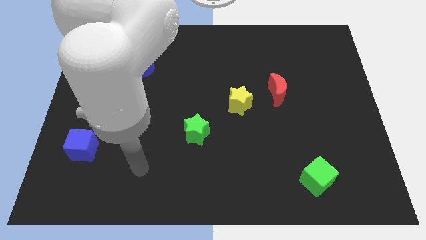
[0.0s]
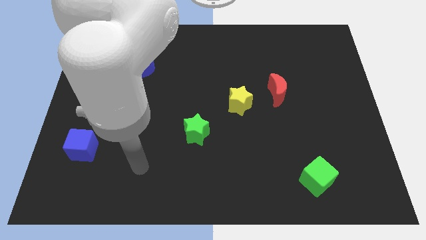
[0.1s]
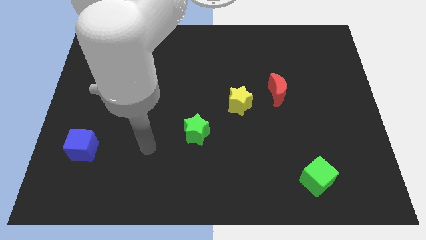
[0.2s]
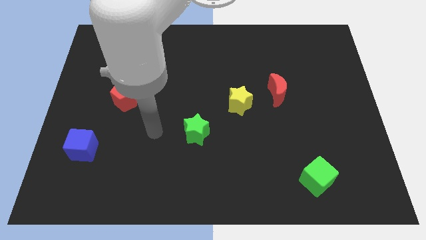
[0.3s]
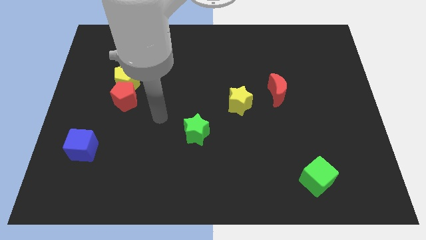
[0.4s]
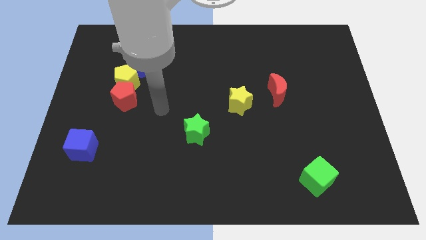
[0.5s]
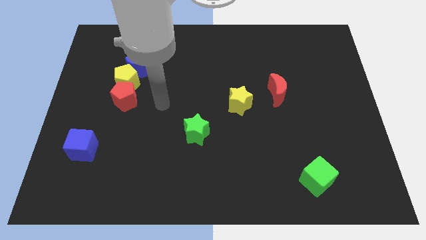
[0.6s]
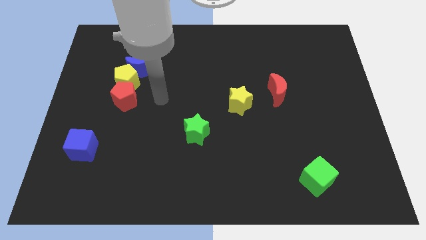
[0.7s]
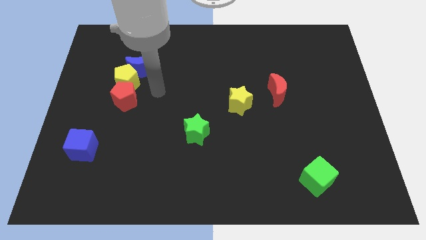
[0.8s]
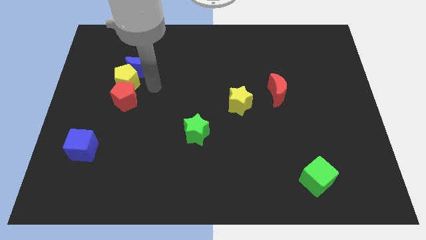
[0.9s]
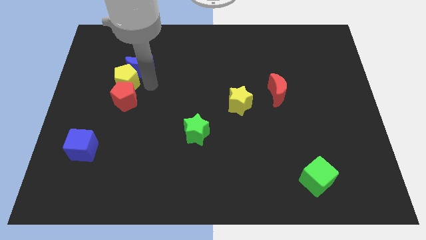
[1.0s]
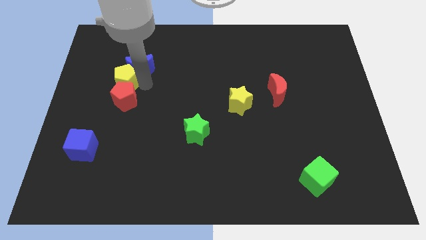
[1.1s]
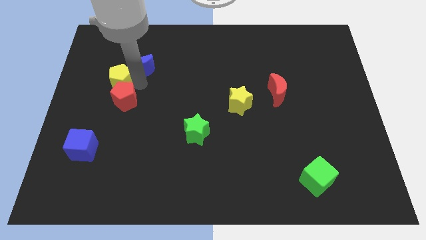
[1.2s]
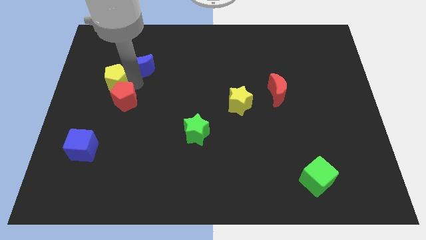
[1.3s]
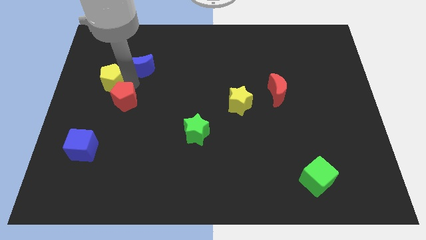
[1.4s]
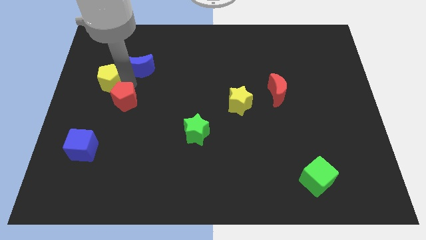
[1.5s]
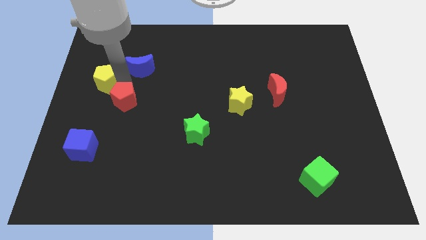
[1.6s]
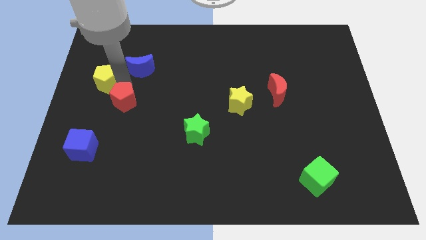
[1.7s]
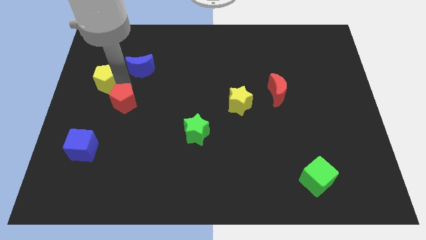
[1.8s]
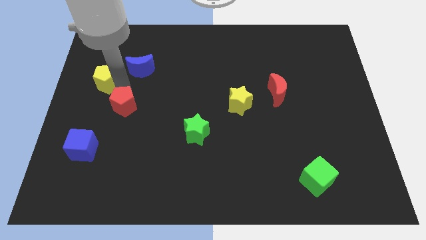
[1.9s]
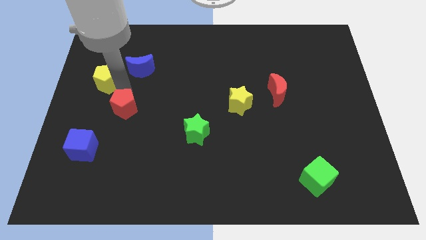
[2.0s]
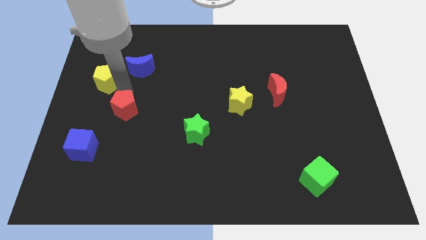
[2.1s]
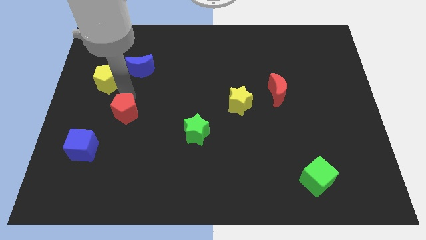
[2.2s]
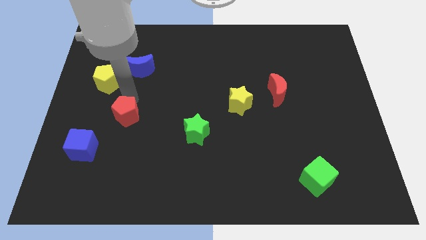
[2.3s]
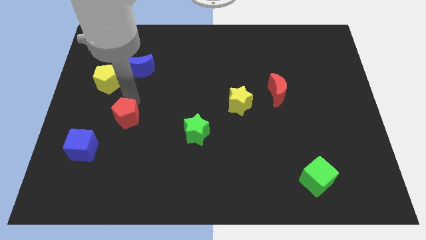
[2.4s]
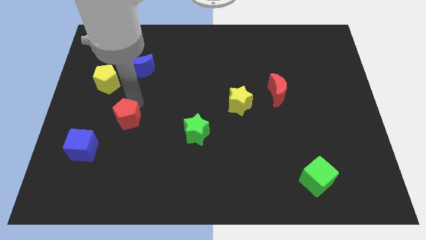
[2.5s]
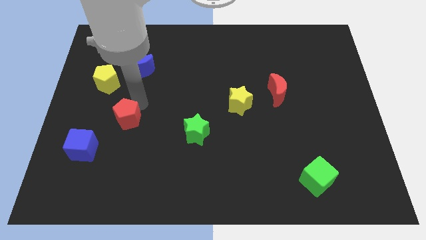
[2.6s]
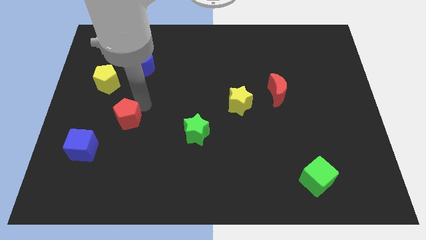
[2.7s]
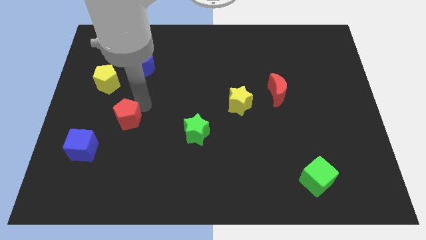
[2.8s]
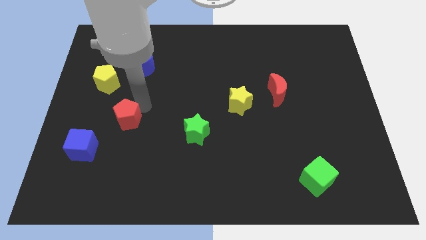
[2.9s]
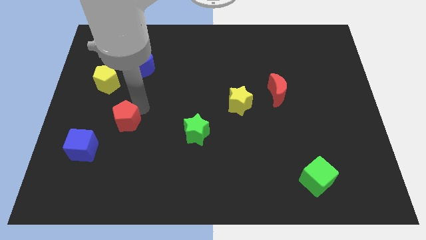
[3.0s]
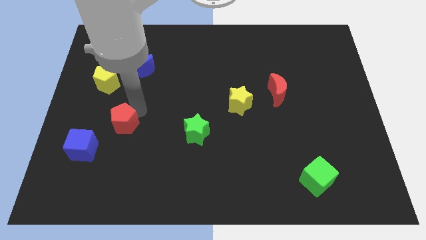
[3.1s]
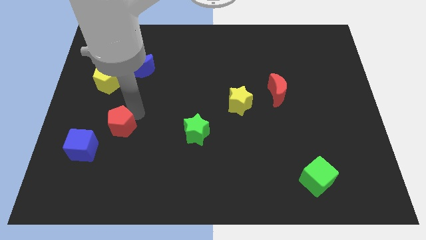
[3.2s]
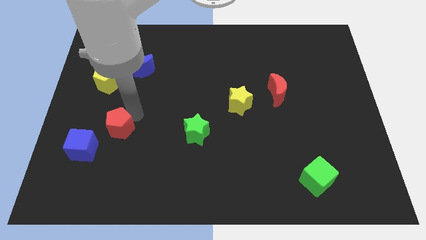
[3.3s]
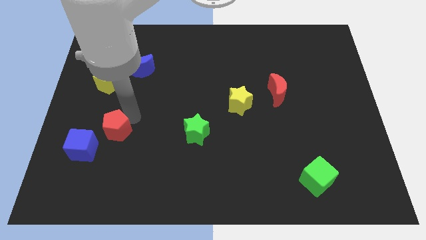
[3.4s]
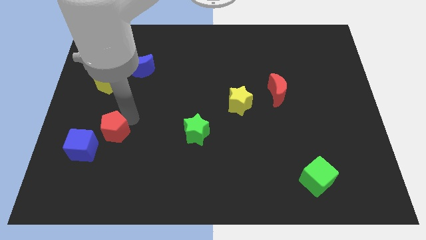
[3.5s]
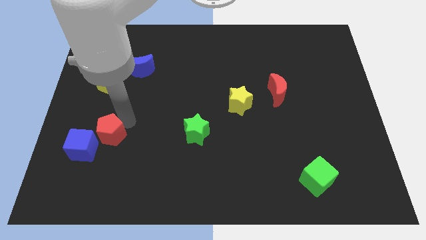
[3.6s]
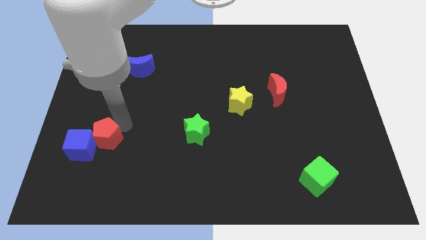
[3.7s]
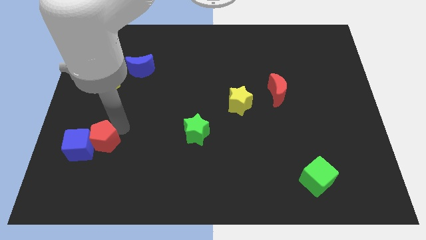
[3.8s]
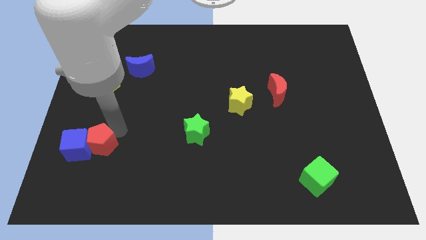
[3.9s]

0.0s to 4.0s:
move the red pentagon towards the blue cube

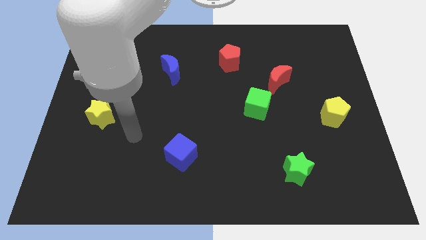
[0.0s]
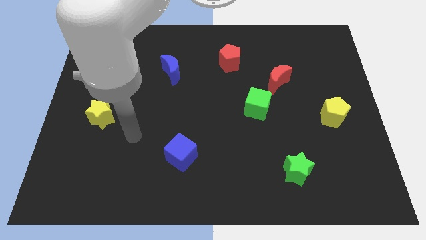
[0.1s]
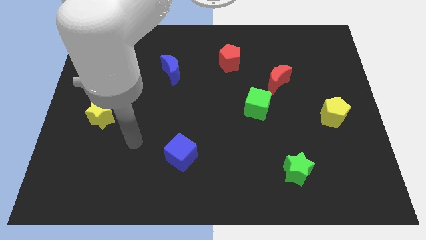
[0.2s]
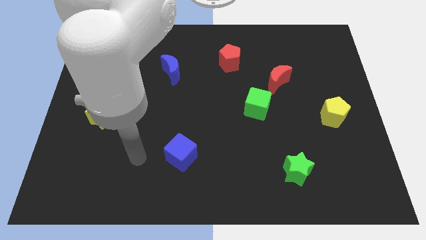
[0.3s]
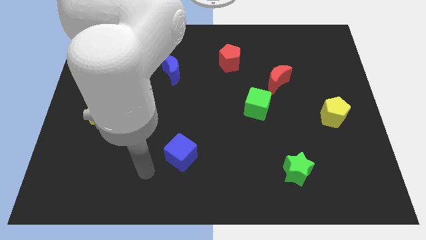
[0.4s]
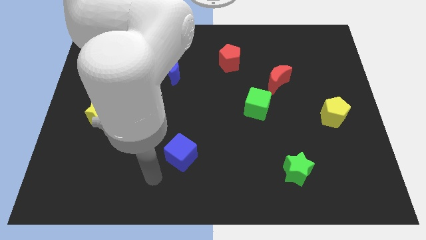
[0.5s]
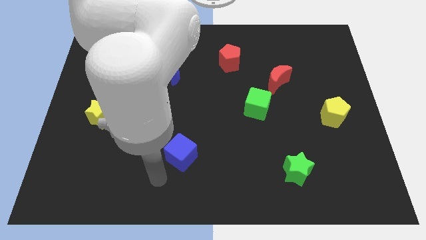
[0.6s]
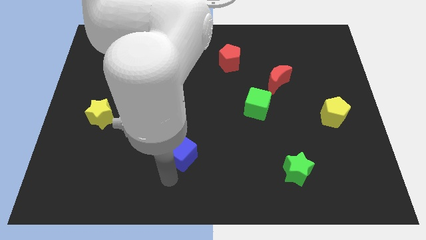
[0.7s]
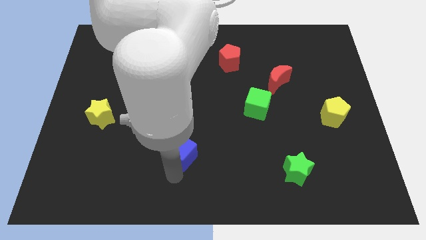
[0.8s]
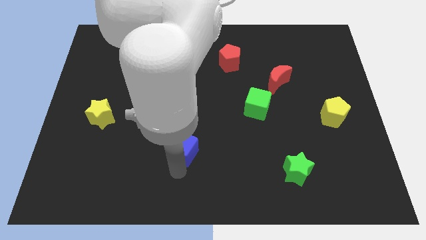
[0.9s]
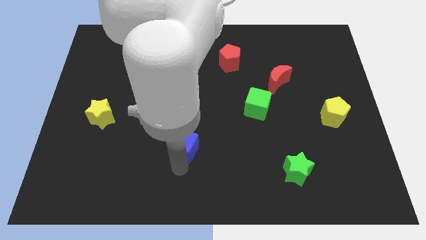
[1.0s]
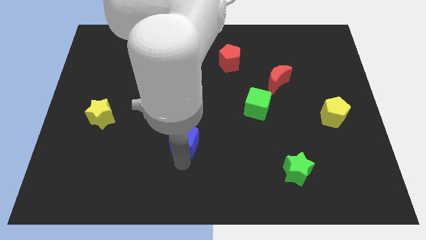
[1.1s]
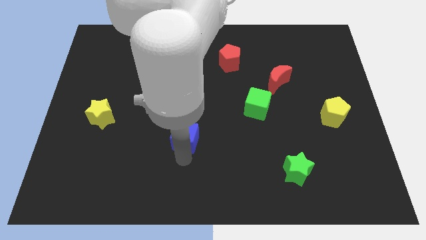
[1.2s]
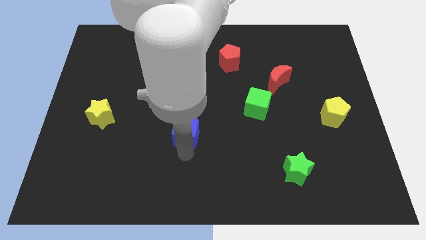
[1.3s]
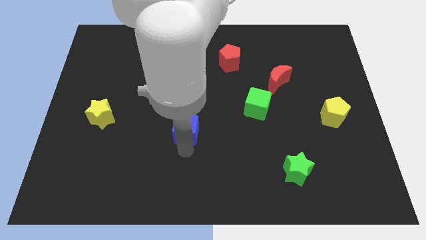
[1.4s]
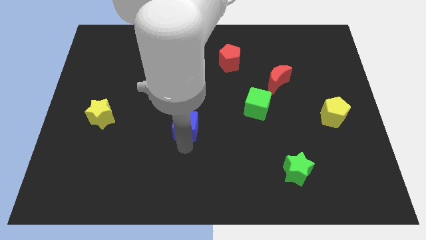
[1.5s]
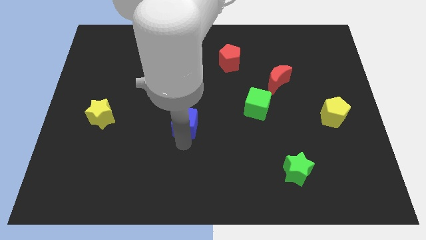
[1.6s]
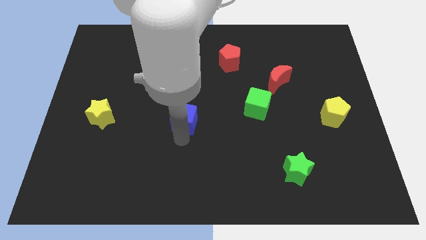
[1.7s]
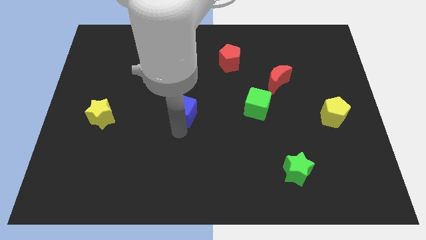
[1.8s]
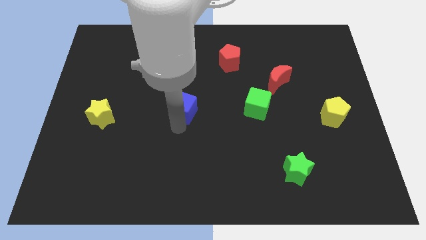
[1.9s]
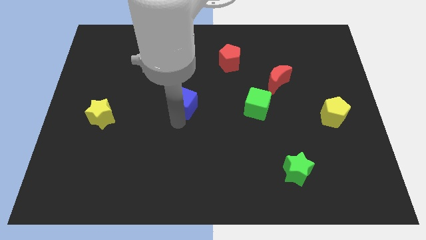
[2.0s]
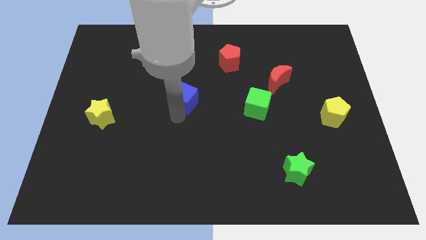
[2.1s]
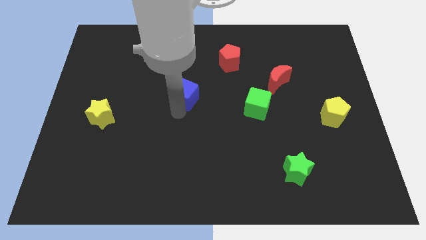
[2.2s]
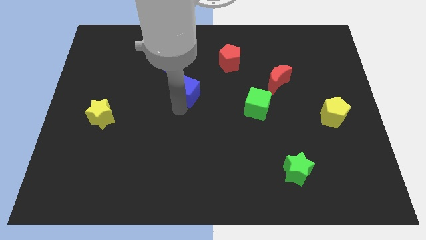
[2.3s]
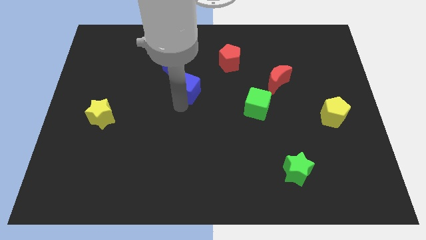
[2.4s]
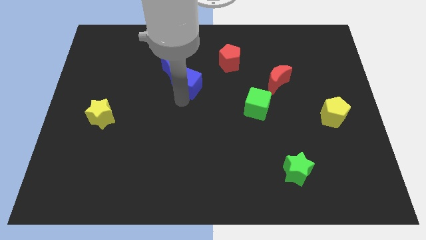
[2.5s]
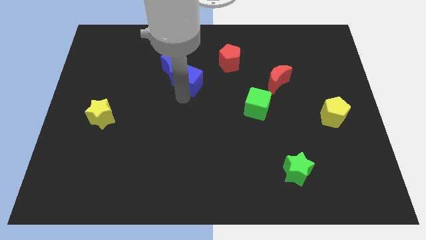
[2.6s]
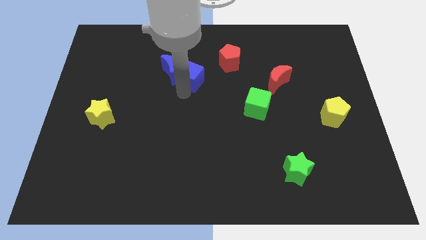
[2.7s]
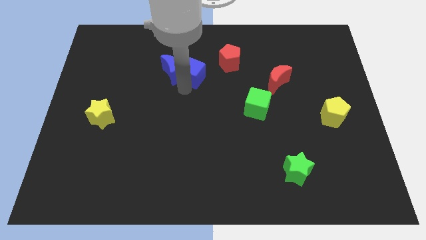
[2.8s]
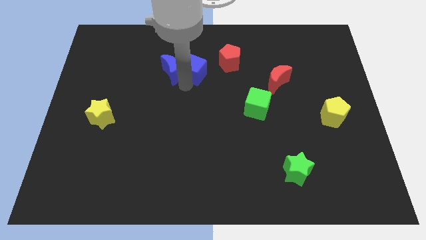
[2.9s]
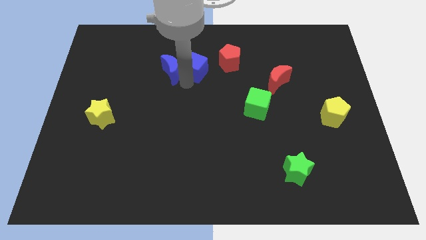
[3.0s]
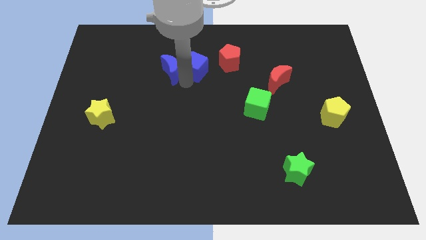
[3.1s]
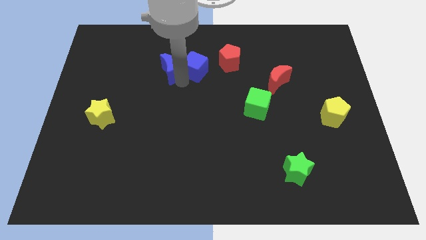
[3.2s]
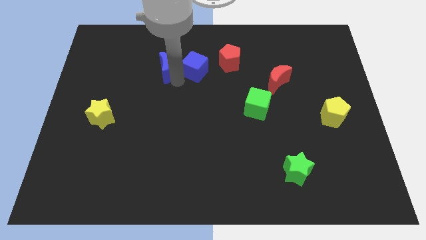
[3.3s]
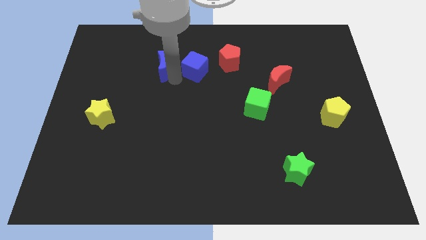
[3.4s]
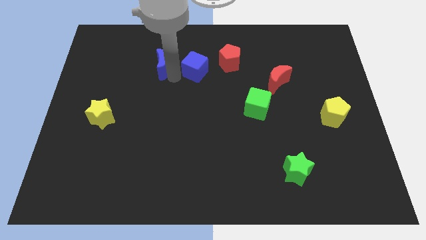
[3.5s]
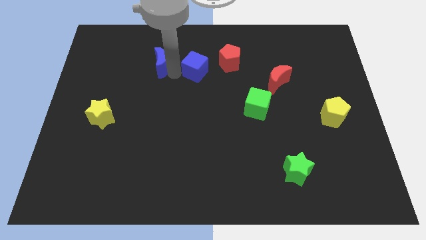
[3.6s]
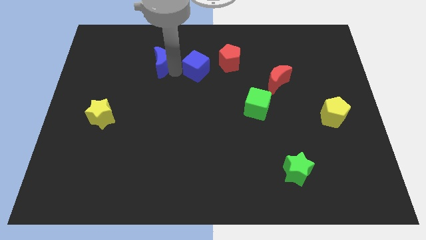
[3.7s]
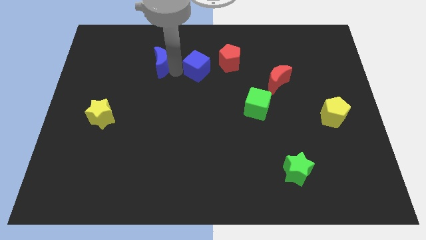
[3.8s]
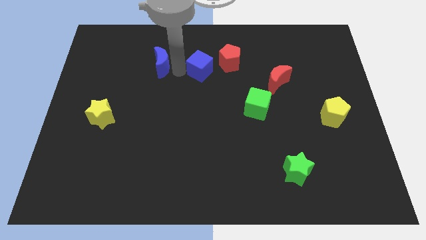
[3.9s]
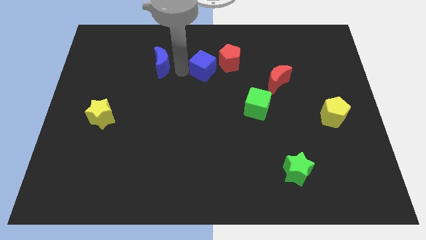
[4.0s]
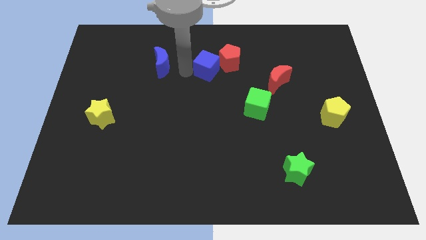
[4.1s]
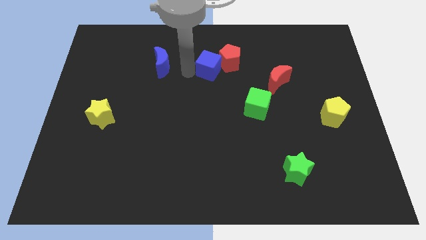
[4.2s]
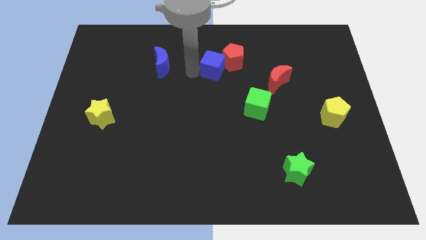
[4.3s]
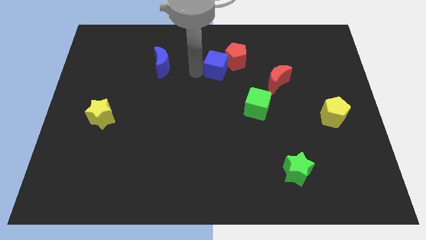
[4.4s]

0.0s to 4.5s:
move the blue cube to the red pentagon

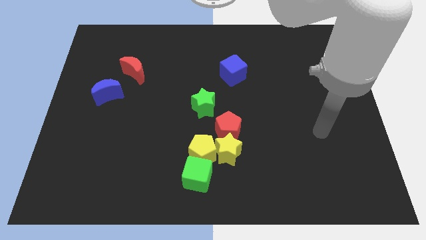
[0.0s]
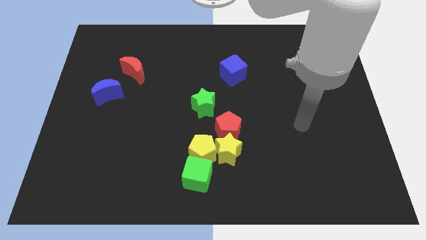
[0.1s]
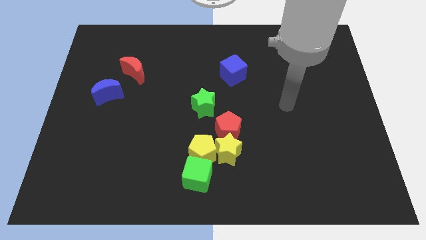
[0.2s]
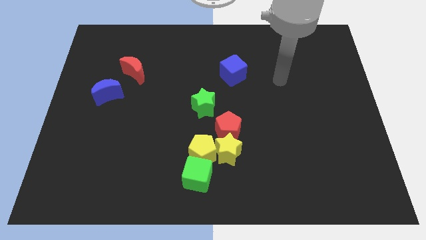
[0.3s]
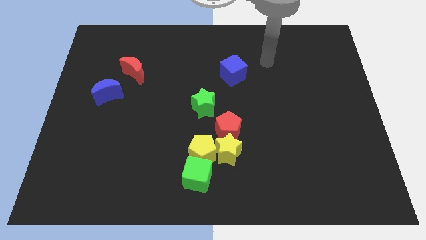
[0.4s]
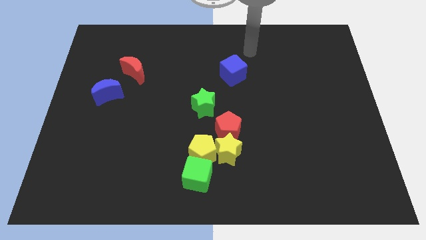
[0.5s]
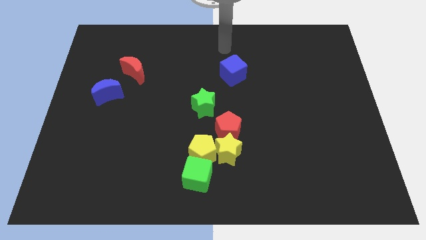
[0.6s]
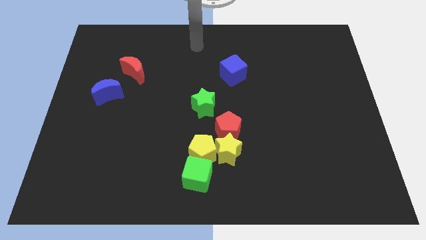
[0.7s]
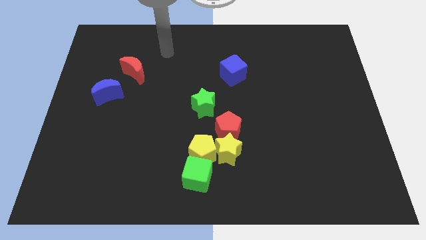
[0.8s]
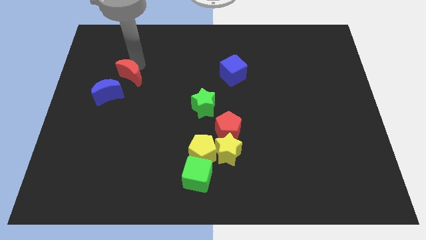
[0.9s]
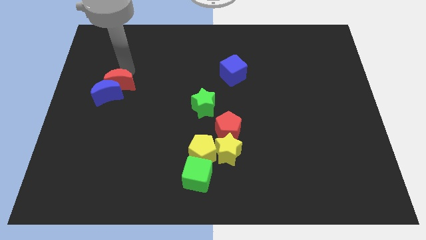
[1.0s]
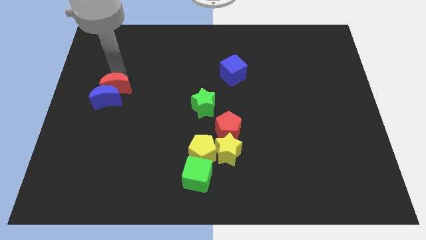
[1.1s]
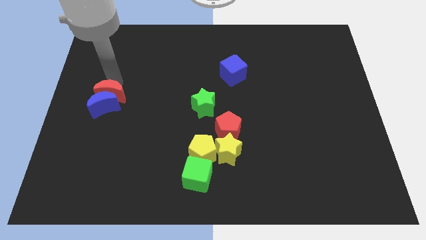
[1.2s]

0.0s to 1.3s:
slide the red moon to the blue moon
